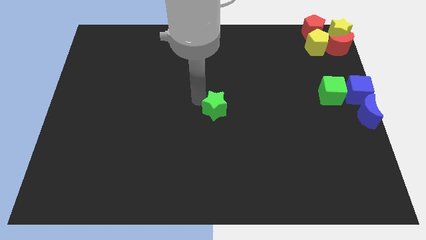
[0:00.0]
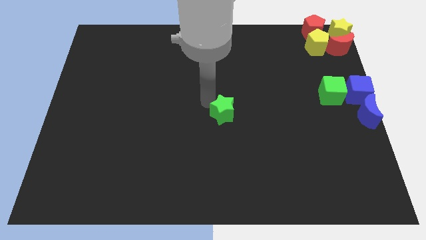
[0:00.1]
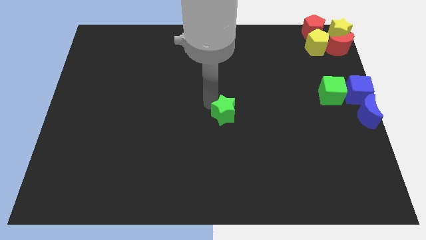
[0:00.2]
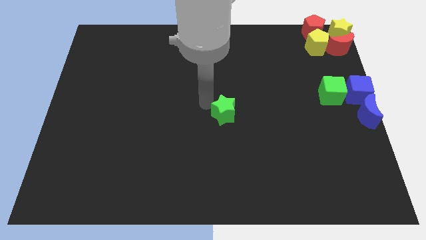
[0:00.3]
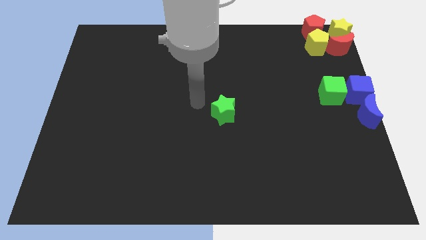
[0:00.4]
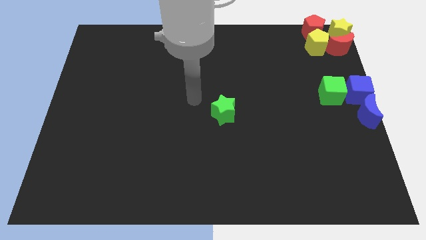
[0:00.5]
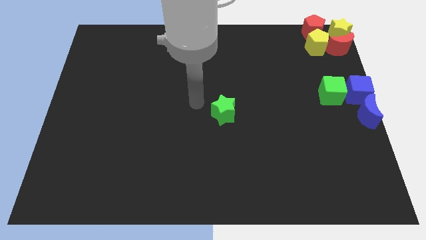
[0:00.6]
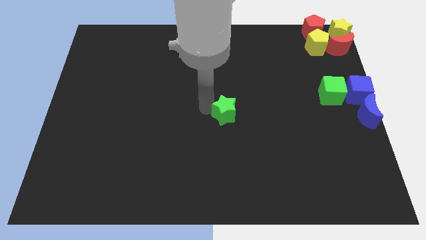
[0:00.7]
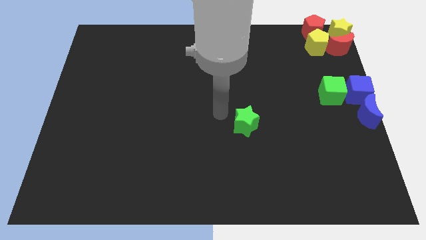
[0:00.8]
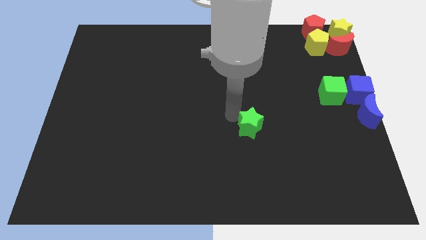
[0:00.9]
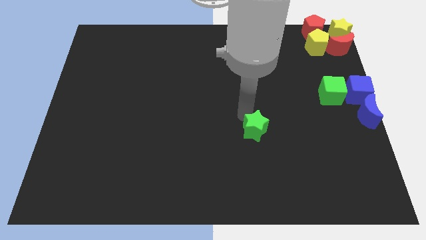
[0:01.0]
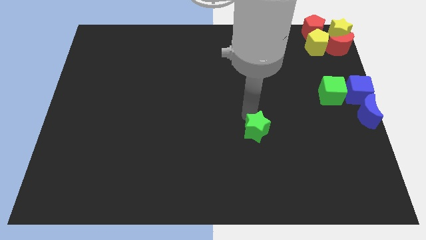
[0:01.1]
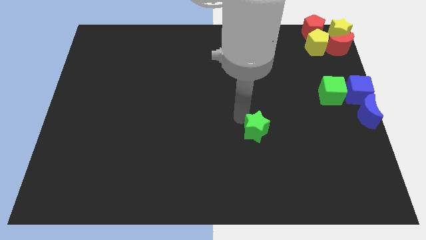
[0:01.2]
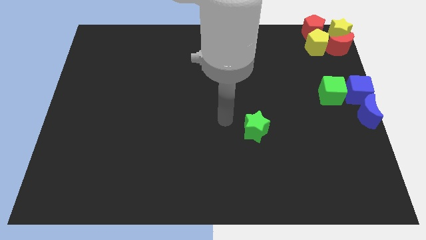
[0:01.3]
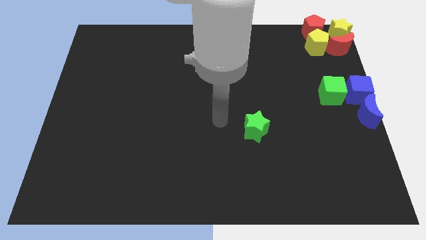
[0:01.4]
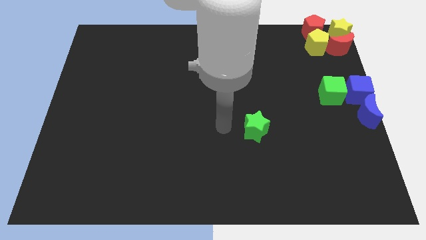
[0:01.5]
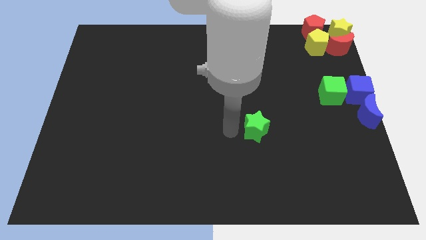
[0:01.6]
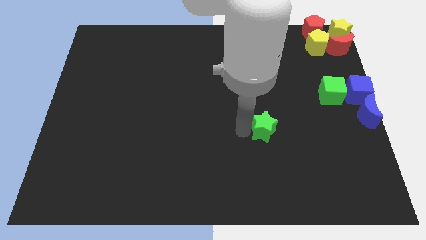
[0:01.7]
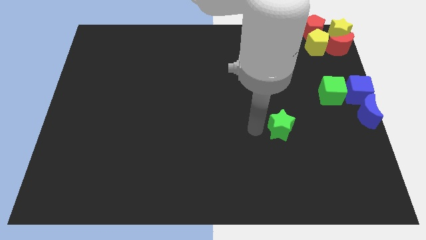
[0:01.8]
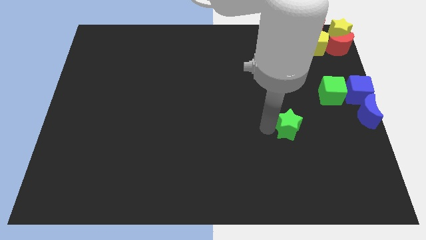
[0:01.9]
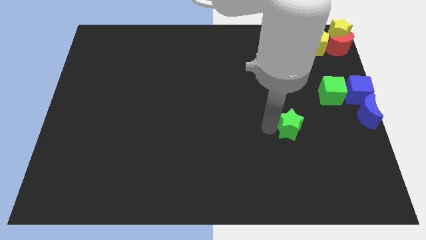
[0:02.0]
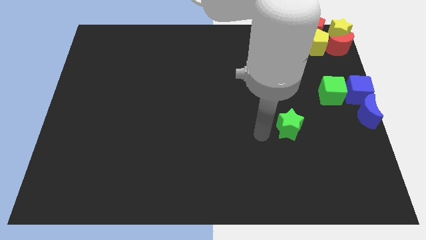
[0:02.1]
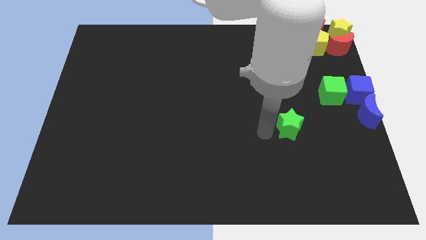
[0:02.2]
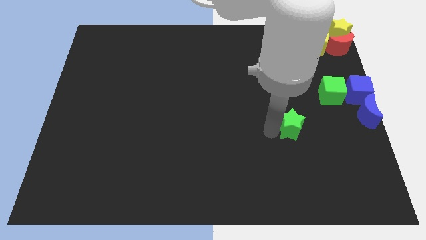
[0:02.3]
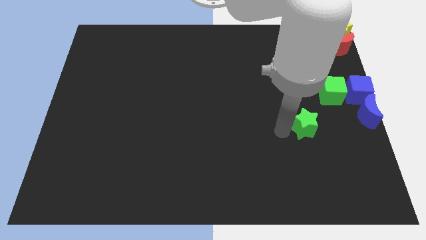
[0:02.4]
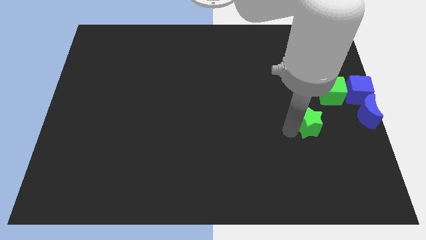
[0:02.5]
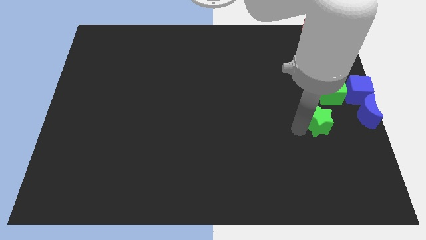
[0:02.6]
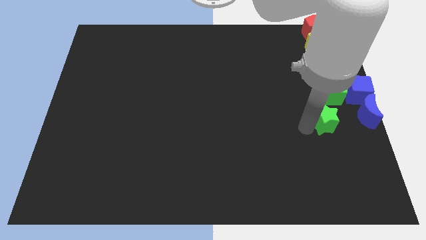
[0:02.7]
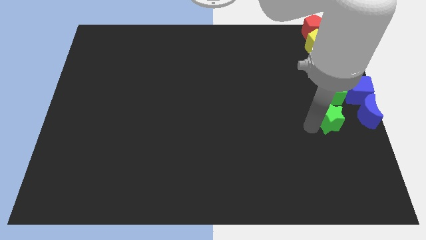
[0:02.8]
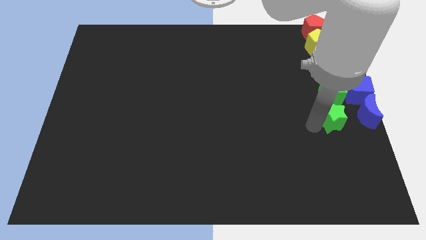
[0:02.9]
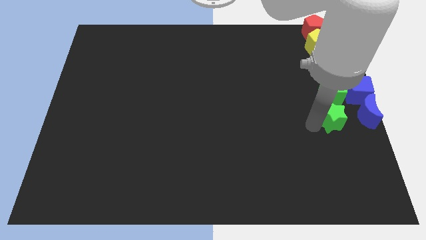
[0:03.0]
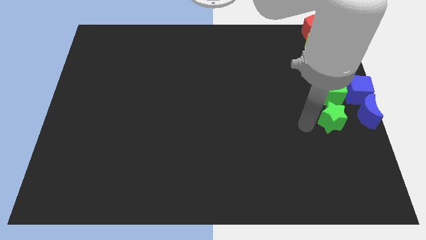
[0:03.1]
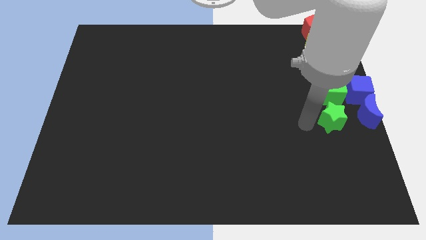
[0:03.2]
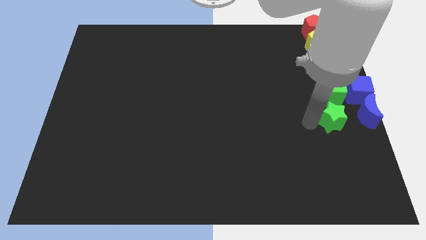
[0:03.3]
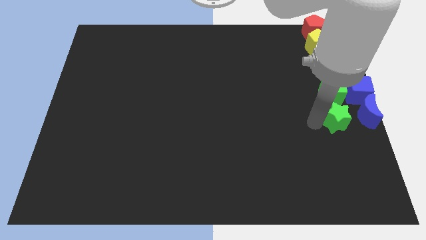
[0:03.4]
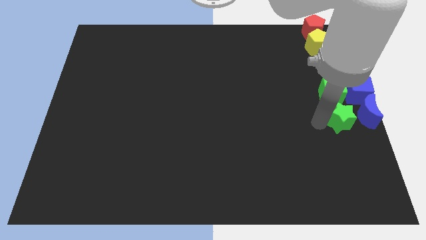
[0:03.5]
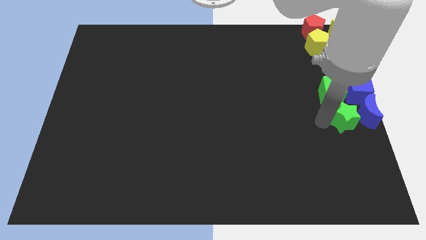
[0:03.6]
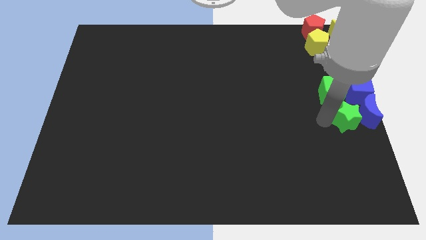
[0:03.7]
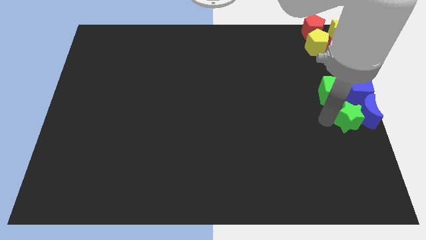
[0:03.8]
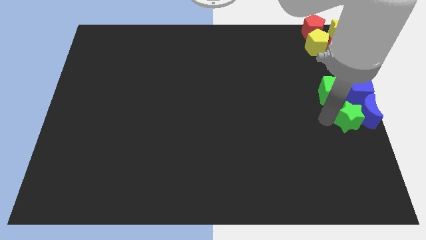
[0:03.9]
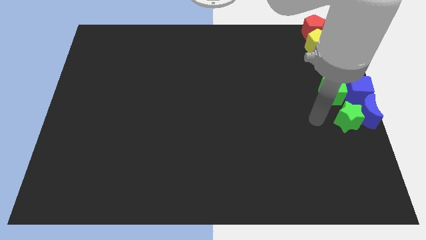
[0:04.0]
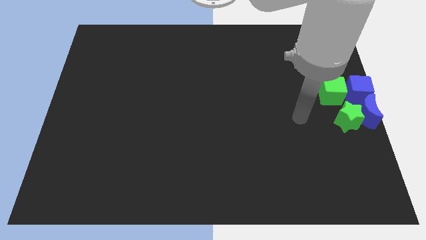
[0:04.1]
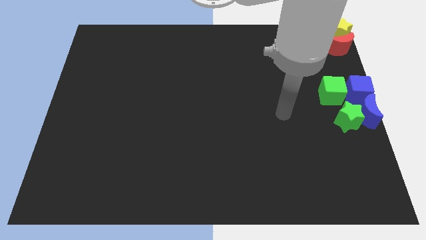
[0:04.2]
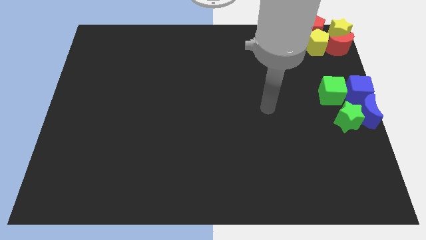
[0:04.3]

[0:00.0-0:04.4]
move the green star into the blue crescent

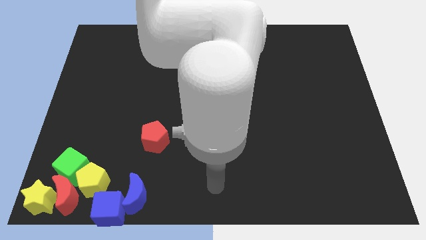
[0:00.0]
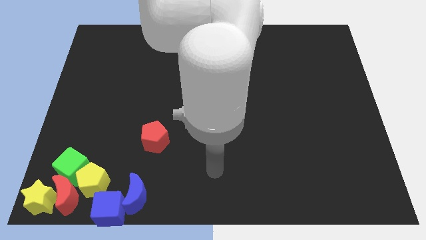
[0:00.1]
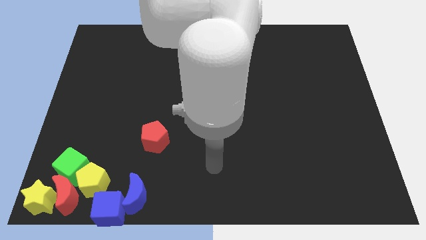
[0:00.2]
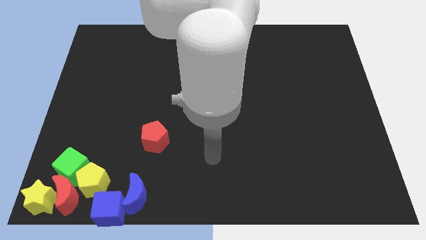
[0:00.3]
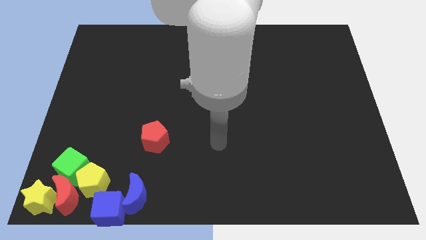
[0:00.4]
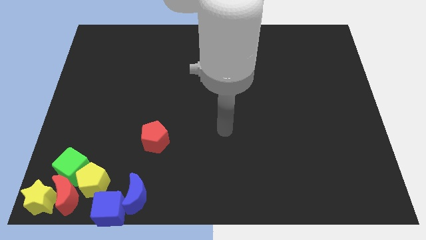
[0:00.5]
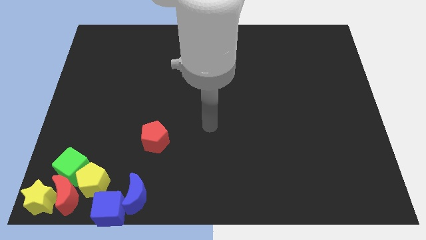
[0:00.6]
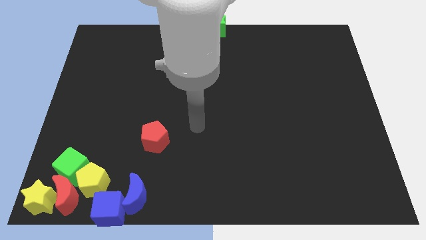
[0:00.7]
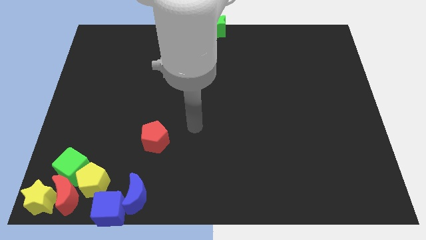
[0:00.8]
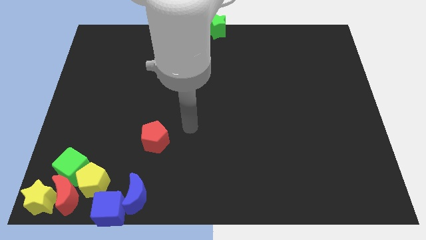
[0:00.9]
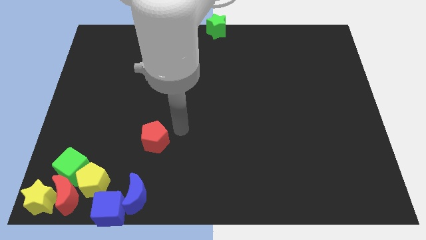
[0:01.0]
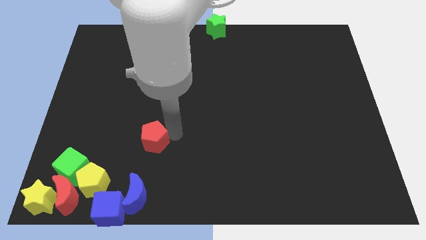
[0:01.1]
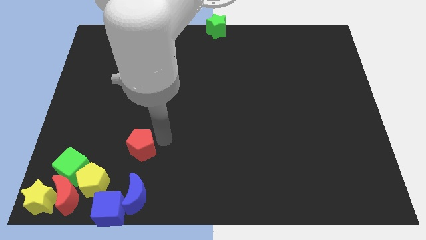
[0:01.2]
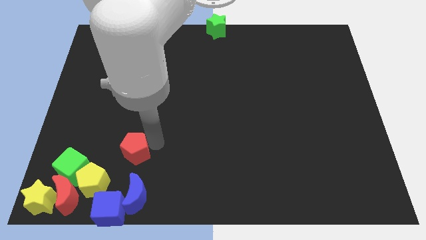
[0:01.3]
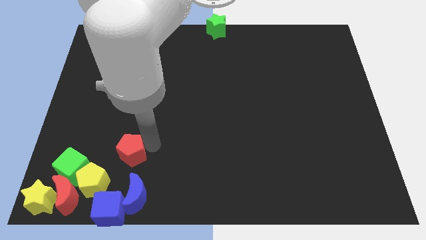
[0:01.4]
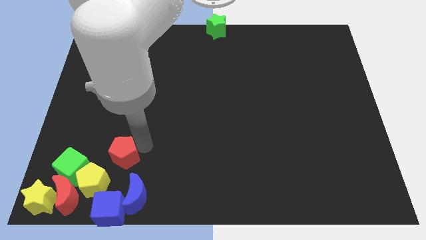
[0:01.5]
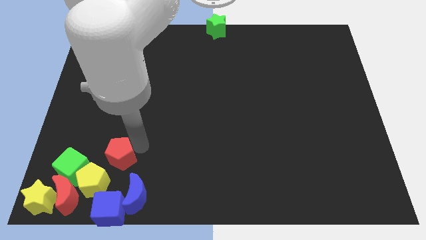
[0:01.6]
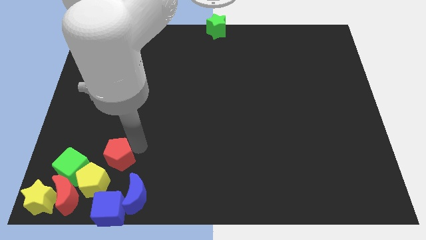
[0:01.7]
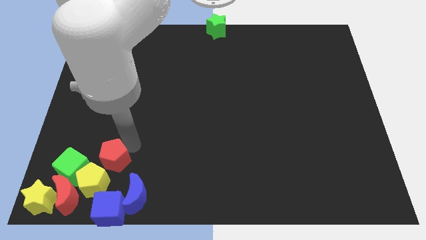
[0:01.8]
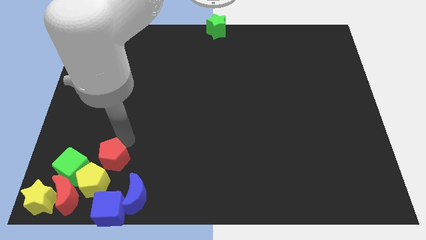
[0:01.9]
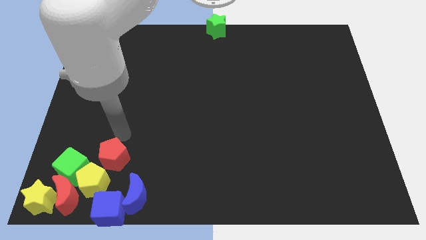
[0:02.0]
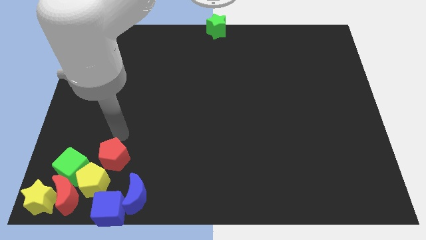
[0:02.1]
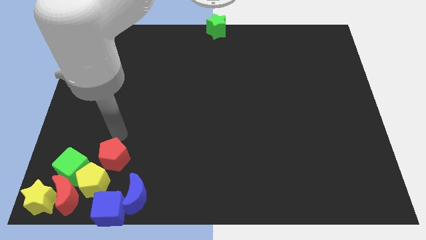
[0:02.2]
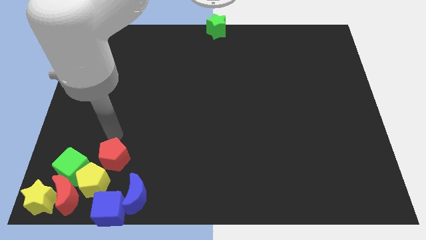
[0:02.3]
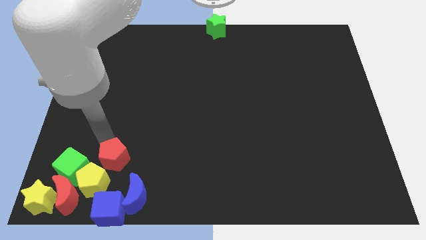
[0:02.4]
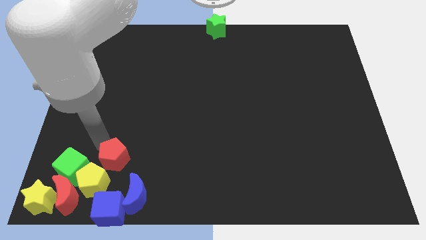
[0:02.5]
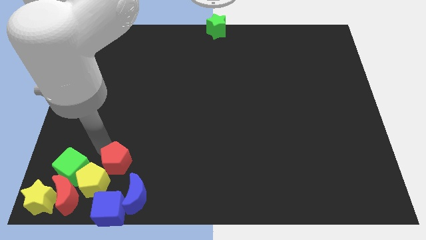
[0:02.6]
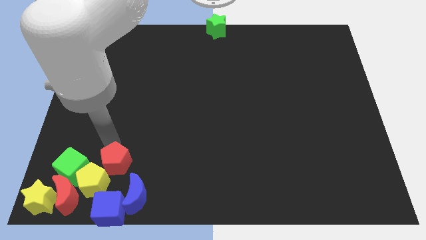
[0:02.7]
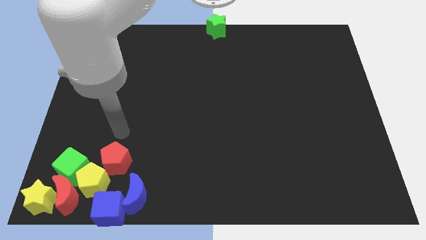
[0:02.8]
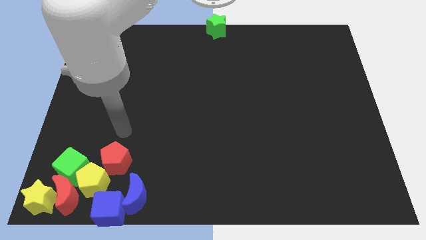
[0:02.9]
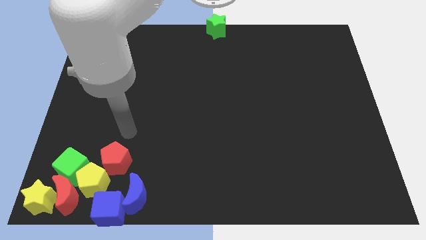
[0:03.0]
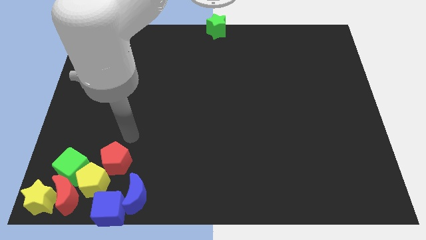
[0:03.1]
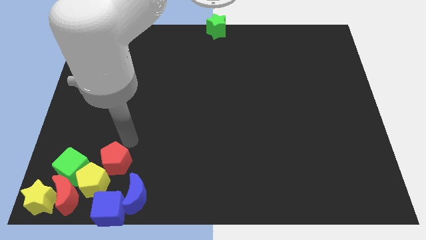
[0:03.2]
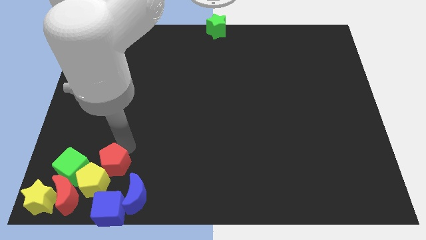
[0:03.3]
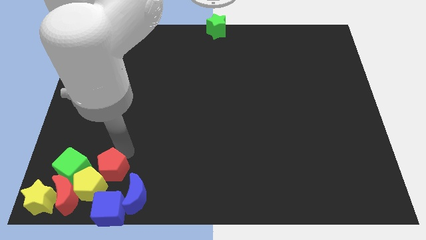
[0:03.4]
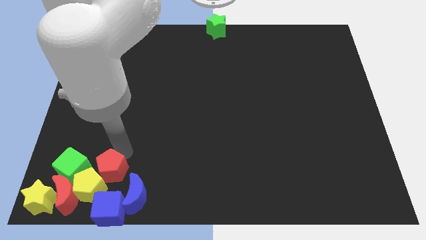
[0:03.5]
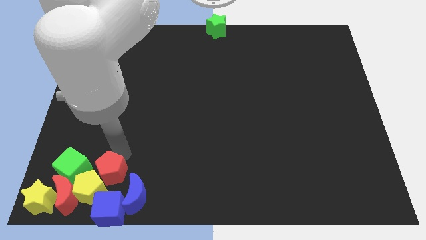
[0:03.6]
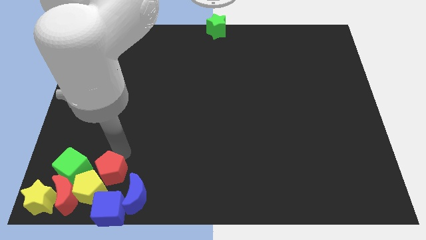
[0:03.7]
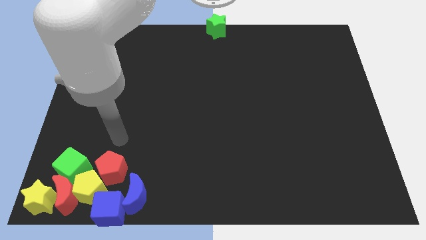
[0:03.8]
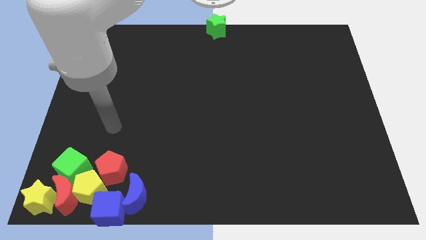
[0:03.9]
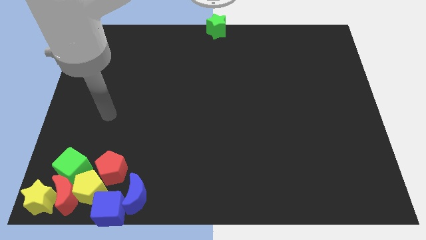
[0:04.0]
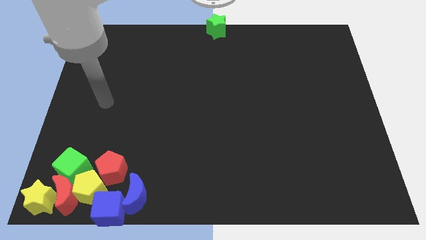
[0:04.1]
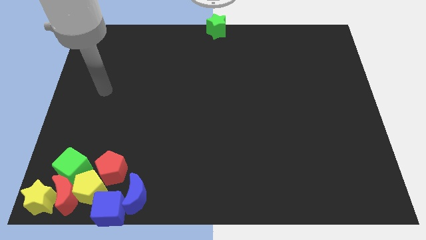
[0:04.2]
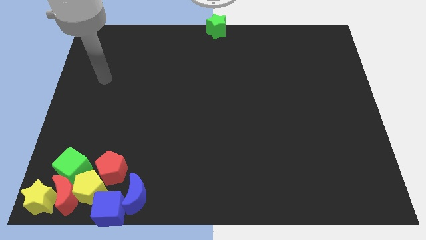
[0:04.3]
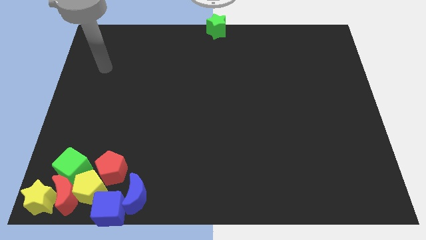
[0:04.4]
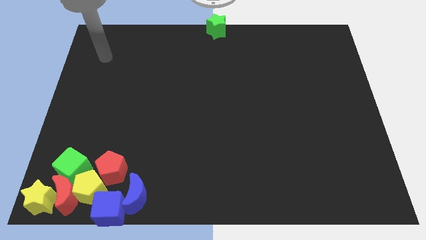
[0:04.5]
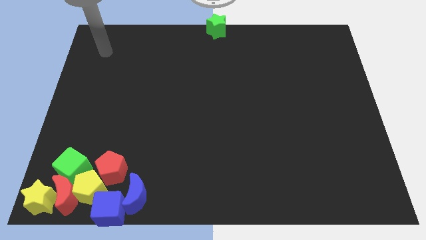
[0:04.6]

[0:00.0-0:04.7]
push the red pentagon into the yellow pentagon
